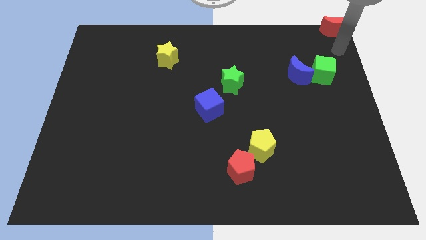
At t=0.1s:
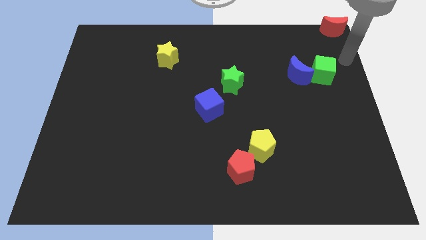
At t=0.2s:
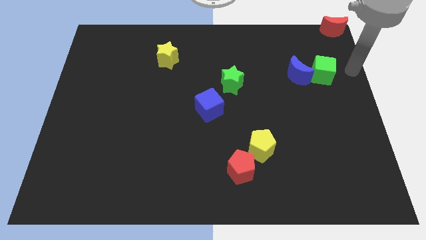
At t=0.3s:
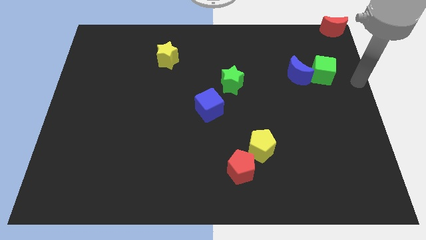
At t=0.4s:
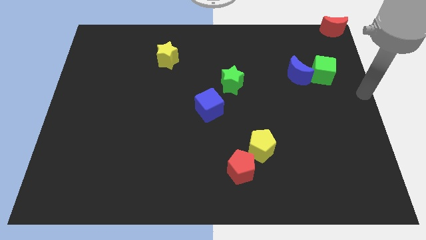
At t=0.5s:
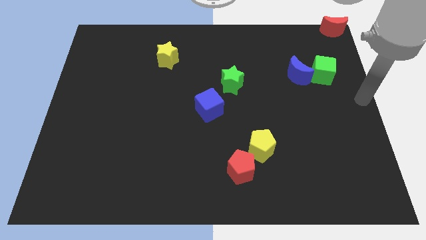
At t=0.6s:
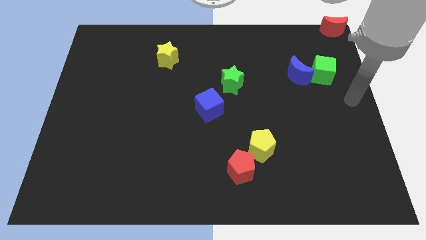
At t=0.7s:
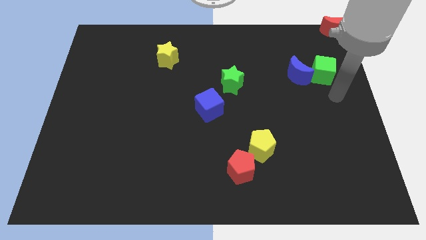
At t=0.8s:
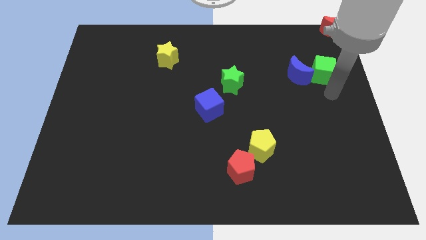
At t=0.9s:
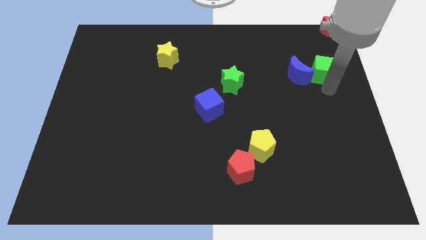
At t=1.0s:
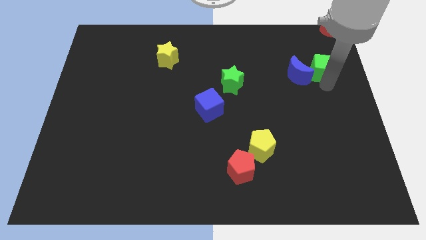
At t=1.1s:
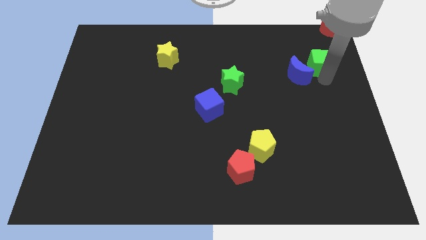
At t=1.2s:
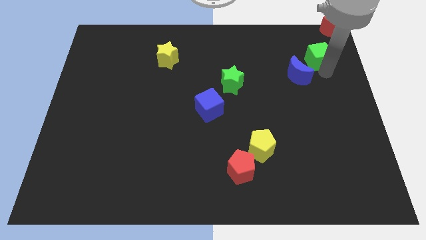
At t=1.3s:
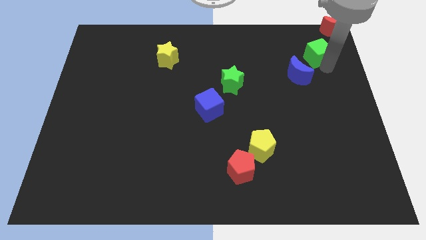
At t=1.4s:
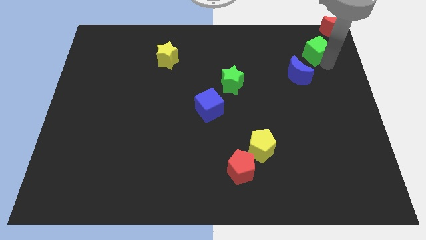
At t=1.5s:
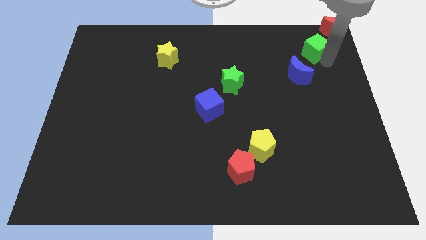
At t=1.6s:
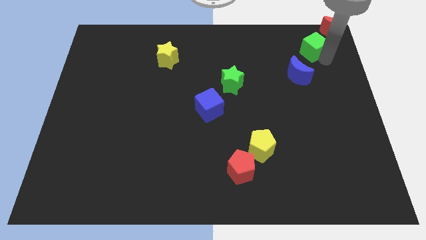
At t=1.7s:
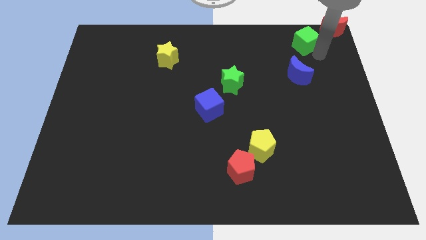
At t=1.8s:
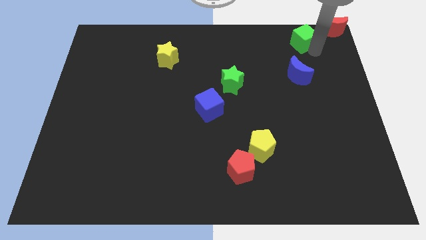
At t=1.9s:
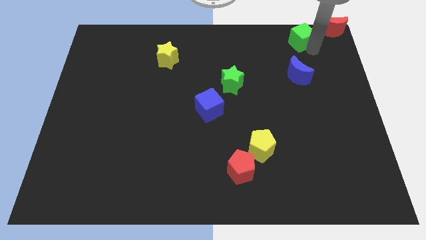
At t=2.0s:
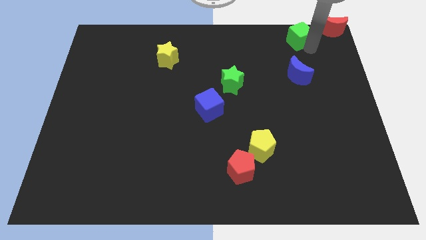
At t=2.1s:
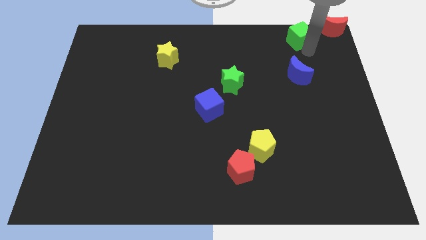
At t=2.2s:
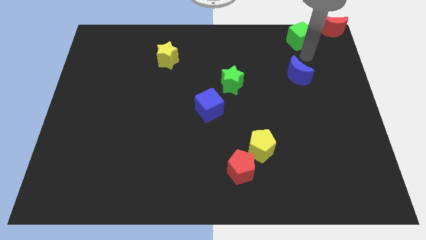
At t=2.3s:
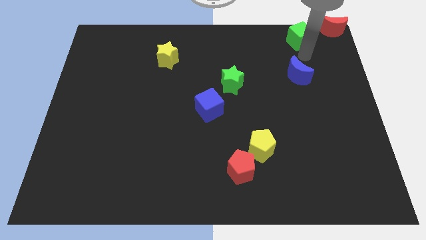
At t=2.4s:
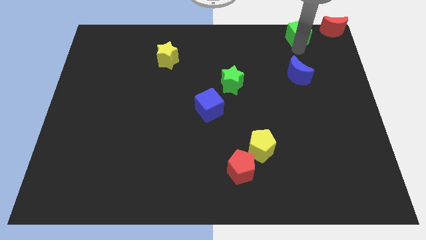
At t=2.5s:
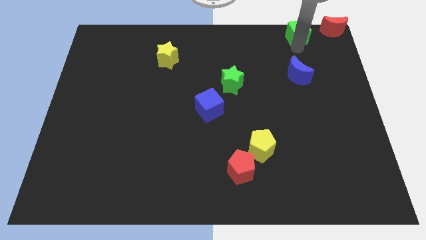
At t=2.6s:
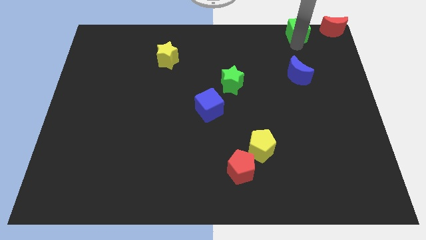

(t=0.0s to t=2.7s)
place green cube to the left of red moon

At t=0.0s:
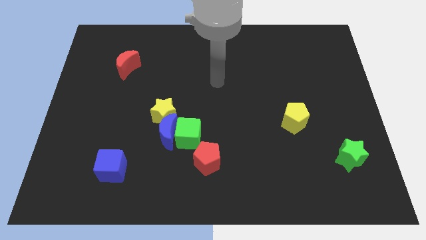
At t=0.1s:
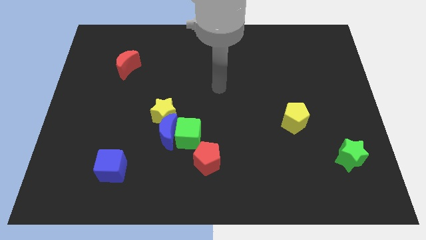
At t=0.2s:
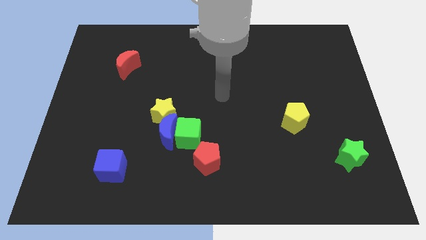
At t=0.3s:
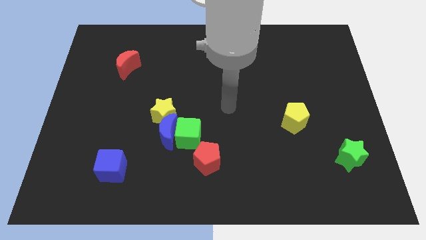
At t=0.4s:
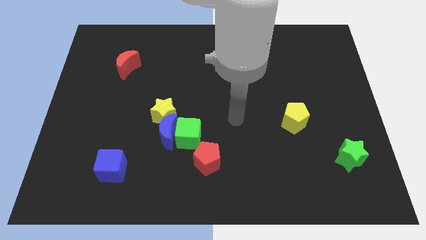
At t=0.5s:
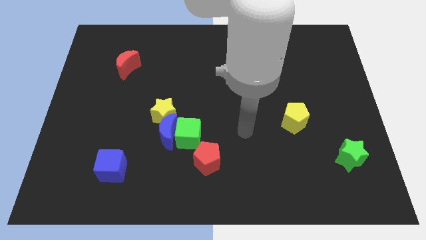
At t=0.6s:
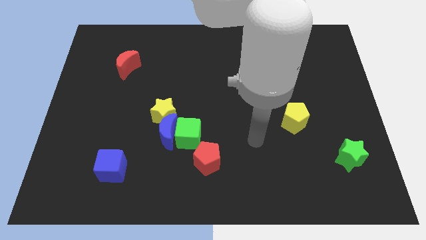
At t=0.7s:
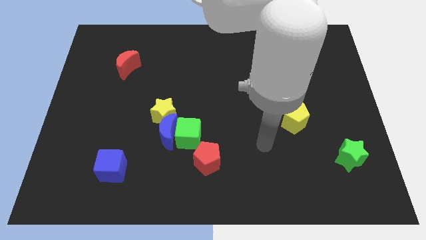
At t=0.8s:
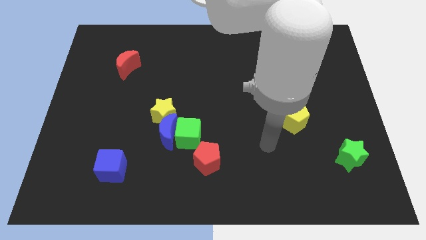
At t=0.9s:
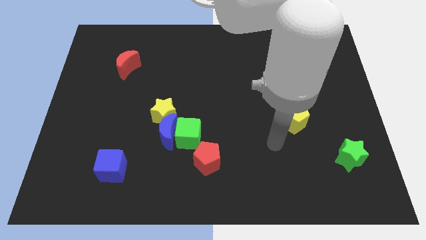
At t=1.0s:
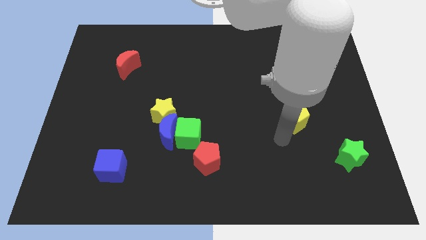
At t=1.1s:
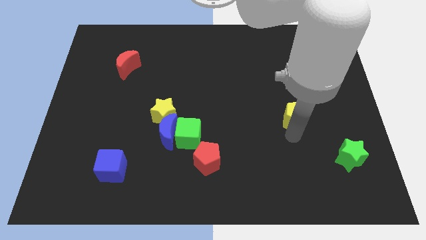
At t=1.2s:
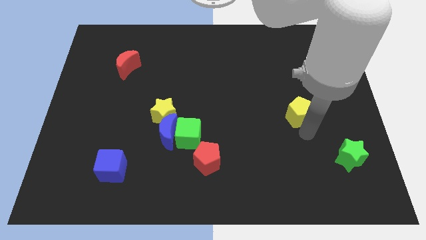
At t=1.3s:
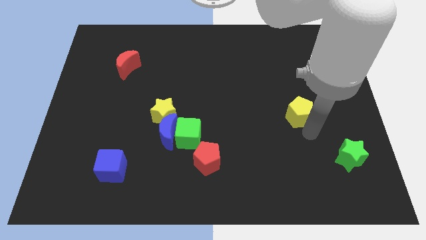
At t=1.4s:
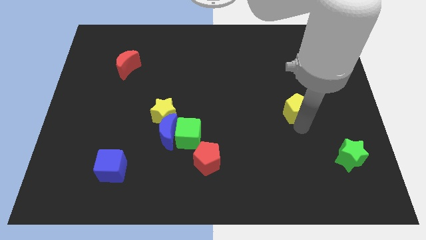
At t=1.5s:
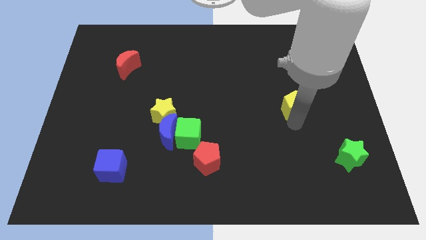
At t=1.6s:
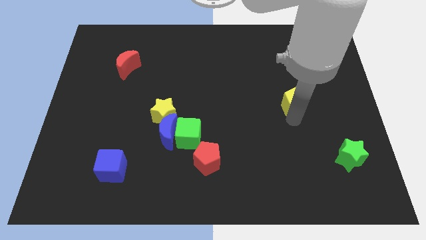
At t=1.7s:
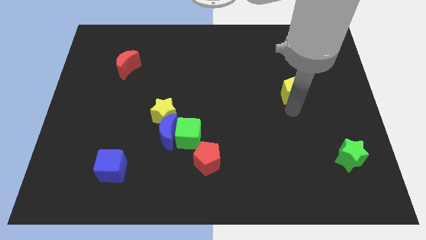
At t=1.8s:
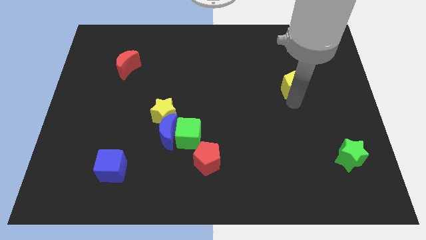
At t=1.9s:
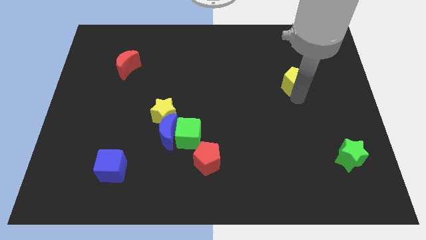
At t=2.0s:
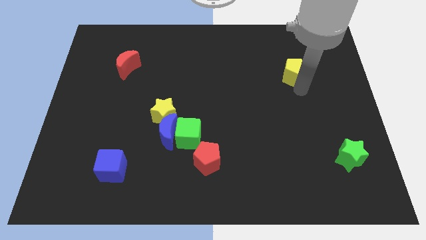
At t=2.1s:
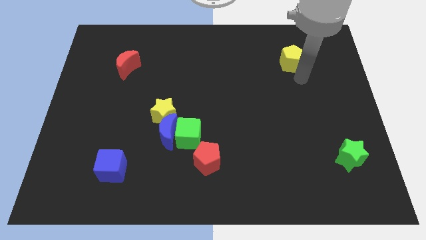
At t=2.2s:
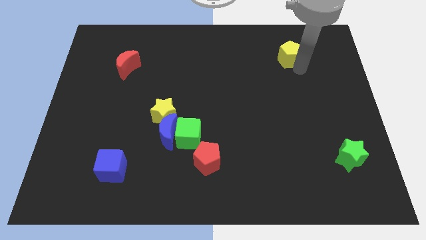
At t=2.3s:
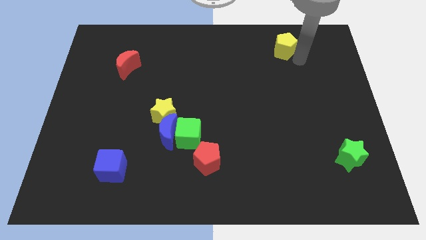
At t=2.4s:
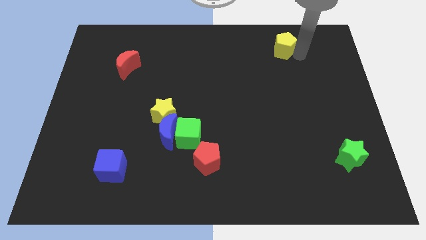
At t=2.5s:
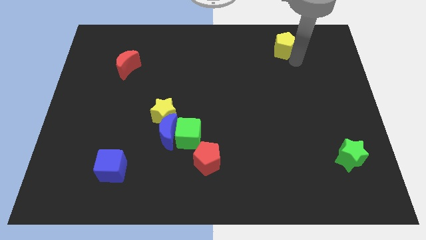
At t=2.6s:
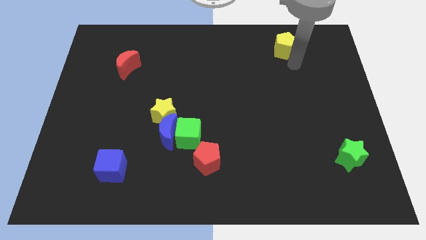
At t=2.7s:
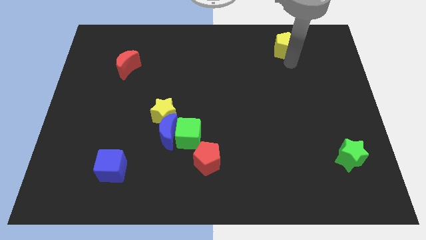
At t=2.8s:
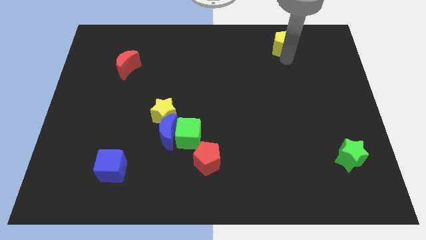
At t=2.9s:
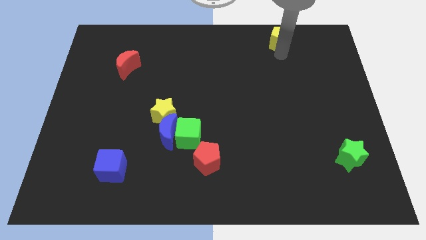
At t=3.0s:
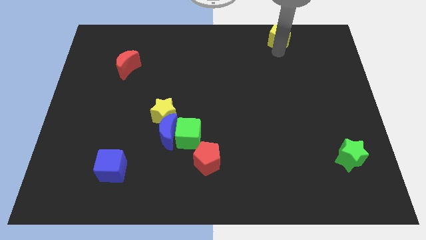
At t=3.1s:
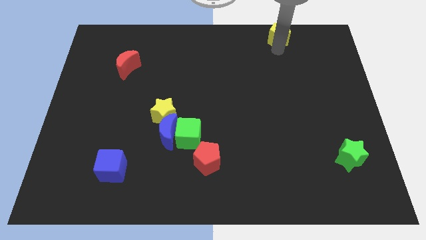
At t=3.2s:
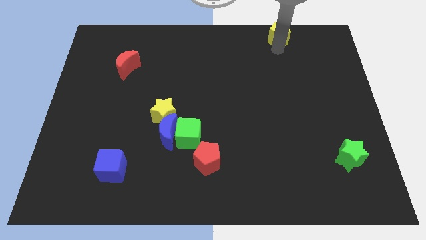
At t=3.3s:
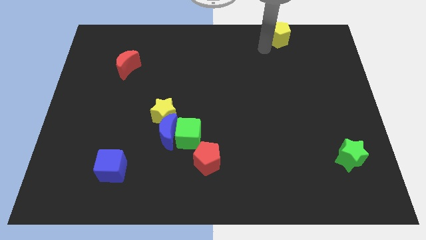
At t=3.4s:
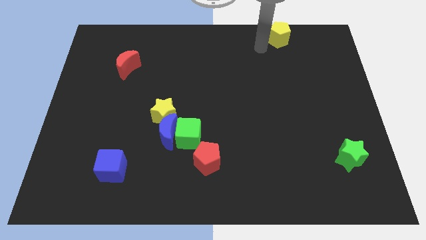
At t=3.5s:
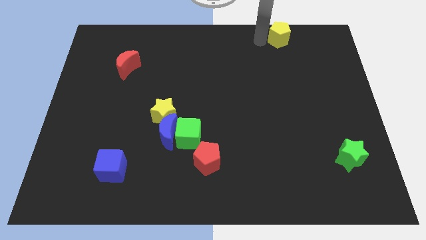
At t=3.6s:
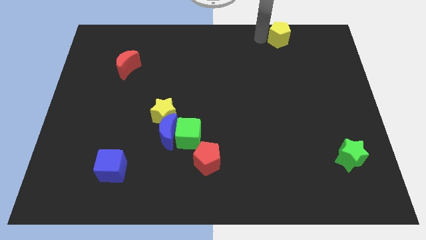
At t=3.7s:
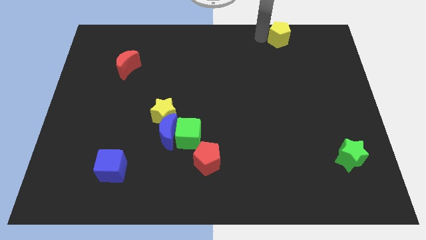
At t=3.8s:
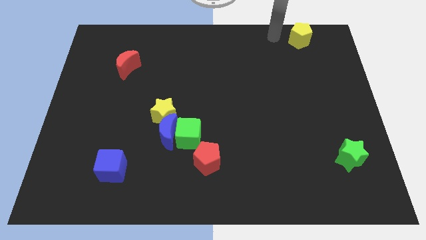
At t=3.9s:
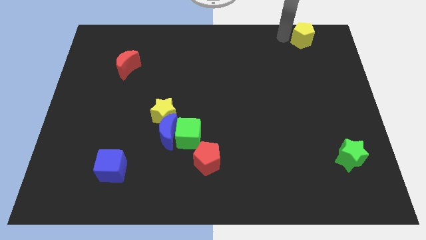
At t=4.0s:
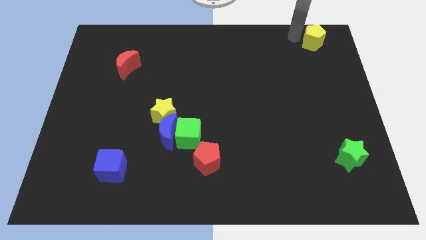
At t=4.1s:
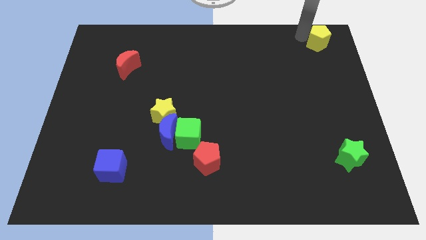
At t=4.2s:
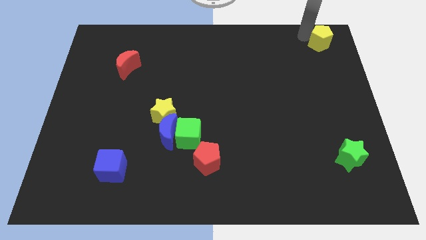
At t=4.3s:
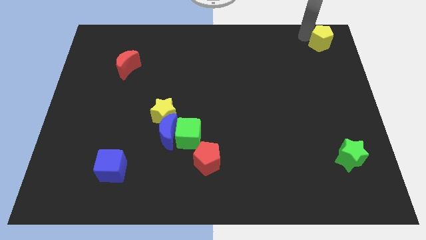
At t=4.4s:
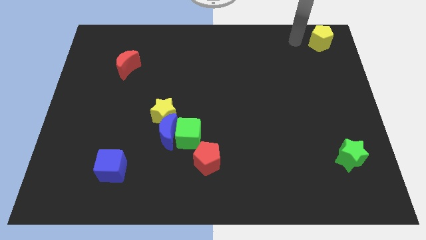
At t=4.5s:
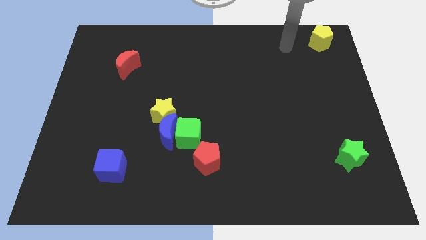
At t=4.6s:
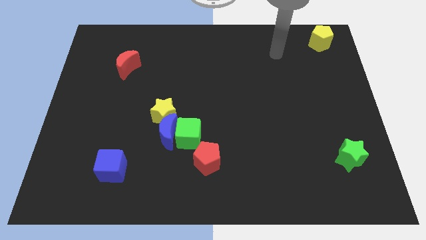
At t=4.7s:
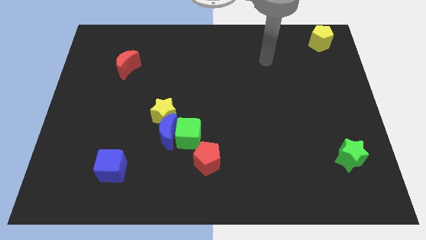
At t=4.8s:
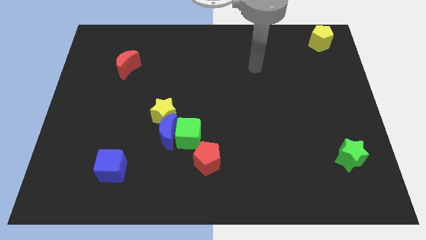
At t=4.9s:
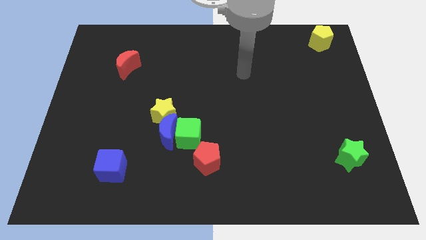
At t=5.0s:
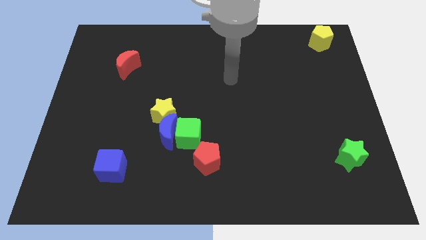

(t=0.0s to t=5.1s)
push the yellow pentagon to the top right corner

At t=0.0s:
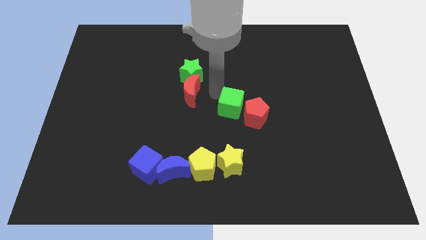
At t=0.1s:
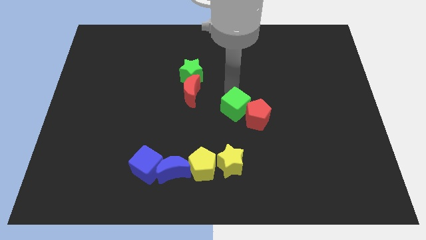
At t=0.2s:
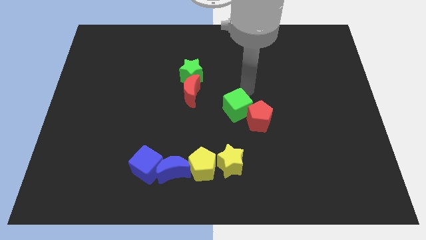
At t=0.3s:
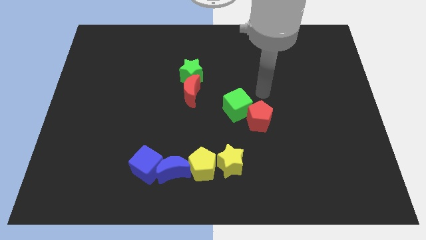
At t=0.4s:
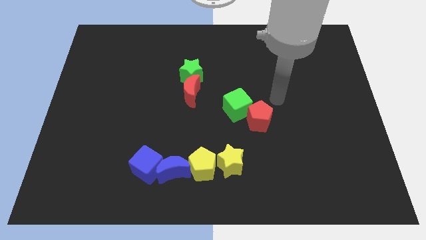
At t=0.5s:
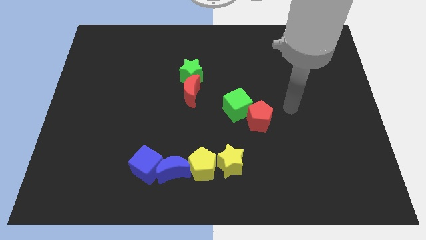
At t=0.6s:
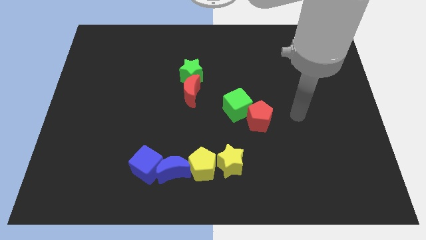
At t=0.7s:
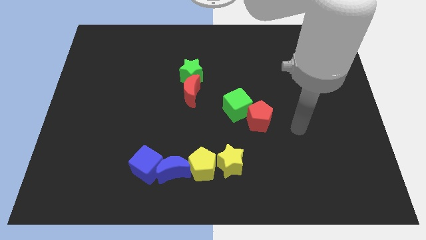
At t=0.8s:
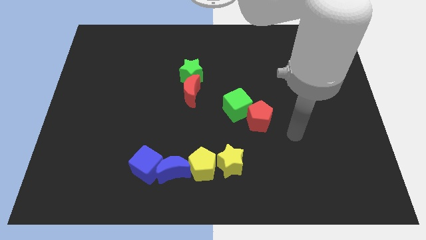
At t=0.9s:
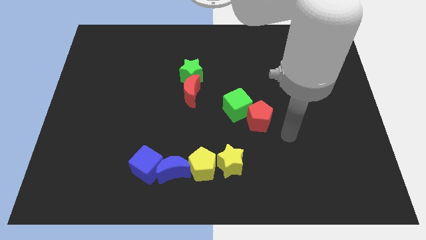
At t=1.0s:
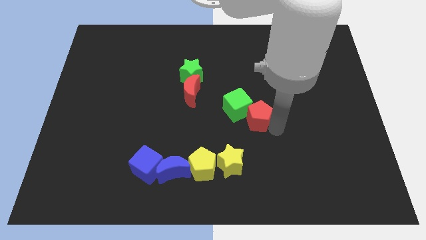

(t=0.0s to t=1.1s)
move your arm around the red pentagon
